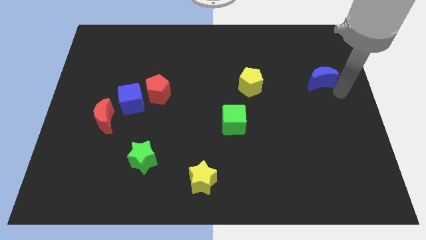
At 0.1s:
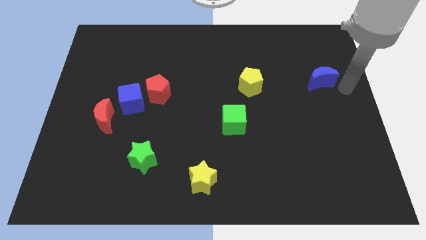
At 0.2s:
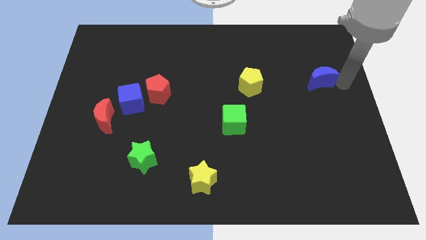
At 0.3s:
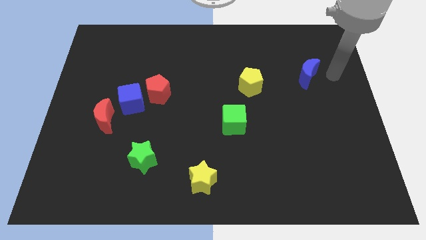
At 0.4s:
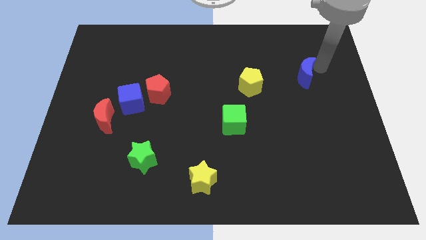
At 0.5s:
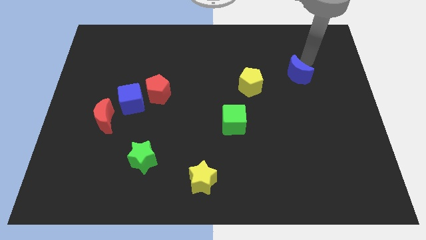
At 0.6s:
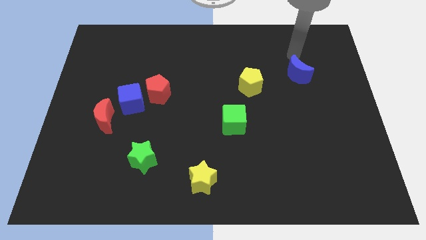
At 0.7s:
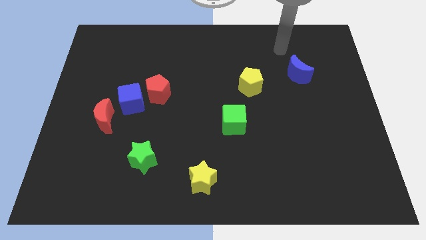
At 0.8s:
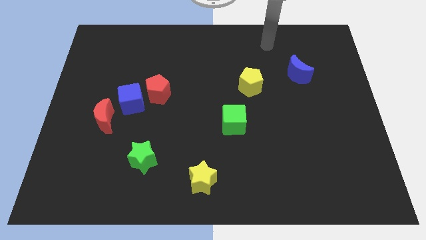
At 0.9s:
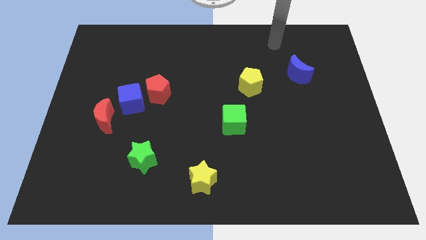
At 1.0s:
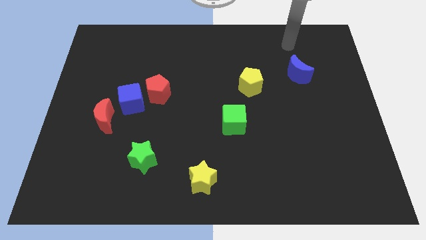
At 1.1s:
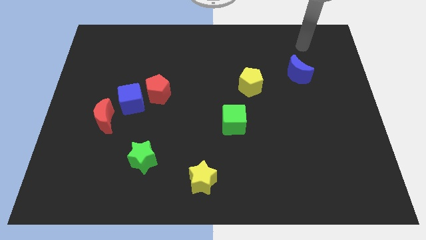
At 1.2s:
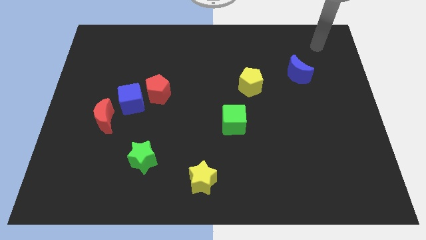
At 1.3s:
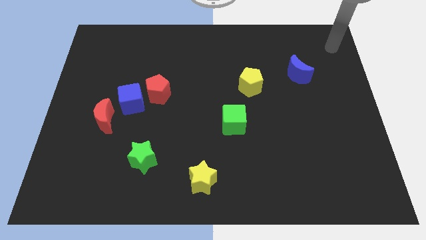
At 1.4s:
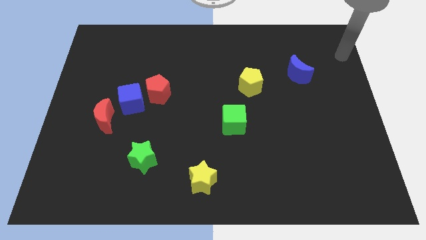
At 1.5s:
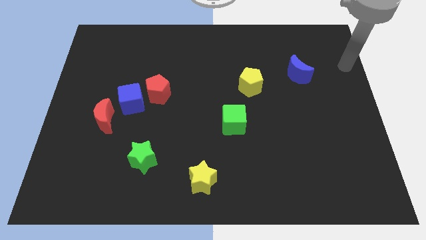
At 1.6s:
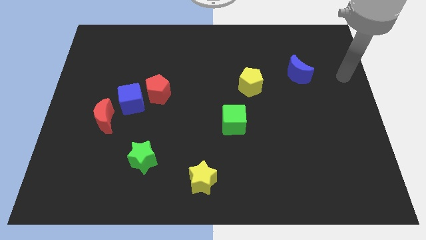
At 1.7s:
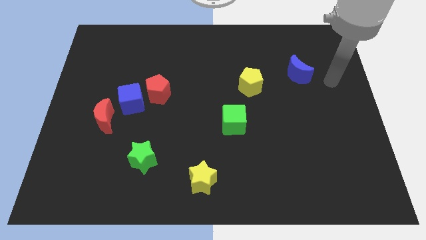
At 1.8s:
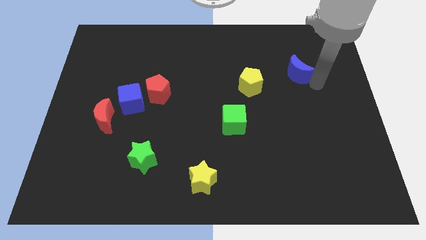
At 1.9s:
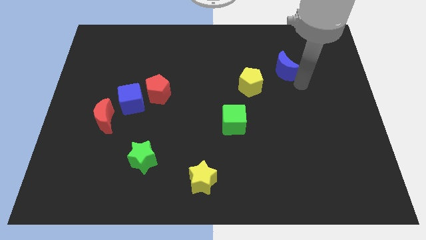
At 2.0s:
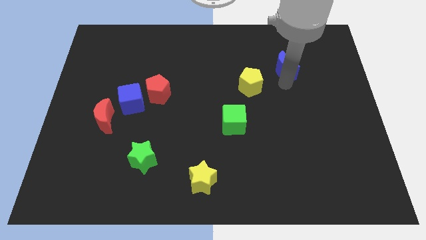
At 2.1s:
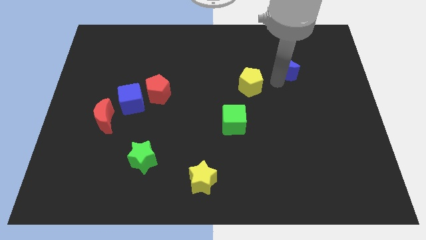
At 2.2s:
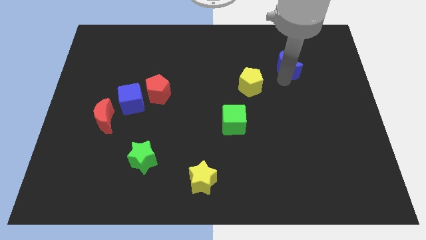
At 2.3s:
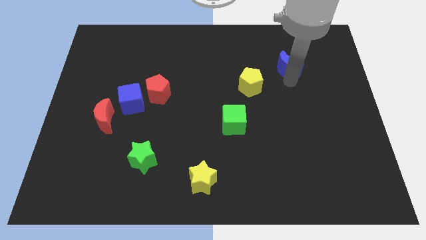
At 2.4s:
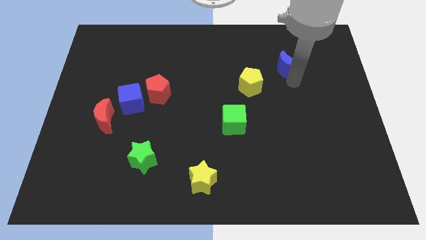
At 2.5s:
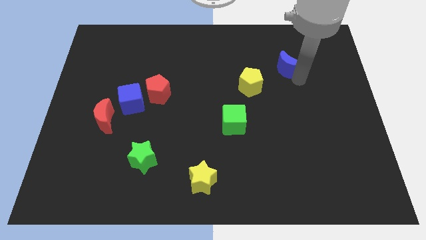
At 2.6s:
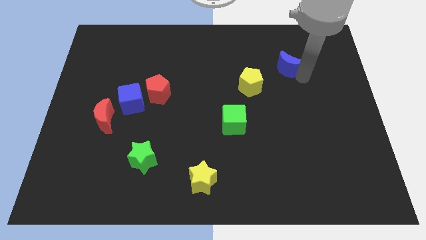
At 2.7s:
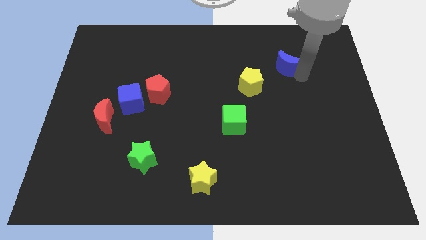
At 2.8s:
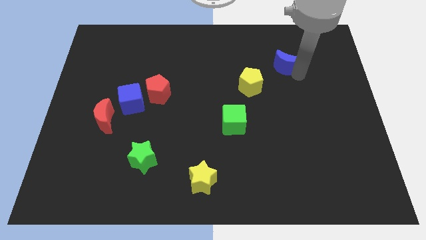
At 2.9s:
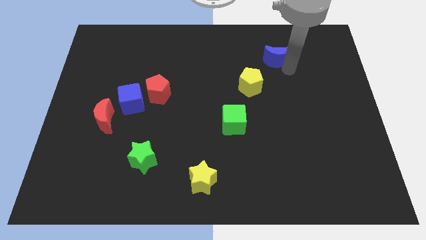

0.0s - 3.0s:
place the blue moon diagonally top right to yellow pentragon

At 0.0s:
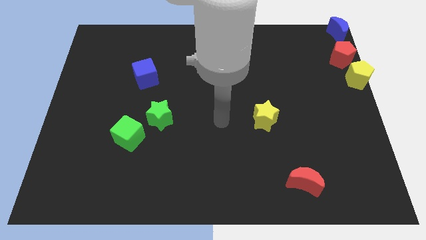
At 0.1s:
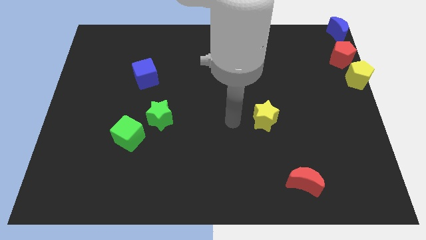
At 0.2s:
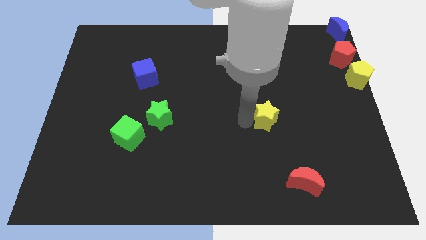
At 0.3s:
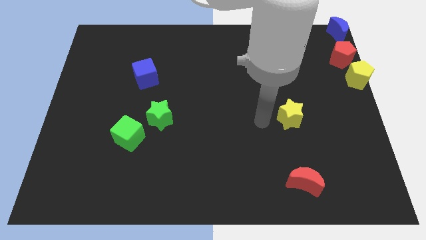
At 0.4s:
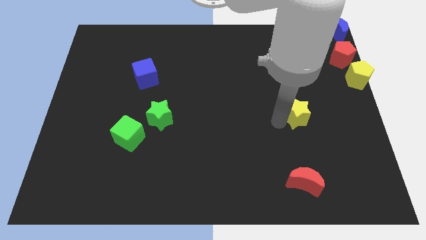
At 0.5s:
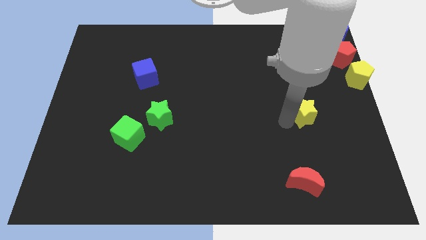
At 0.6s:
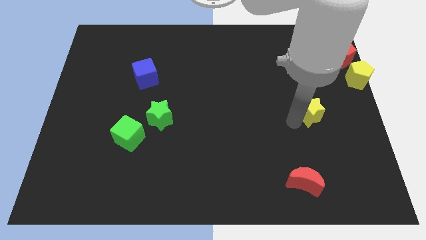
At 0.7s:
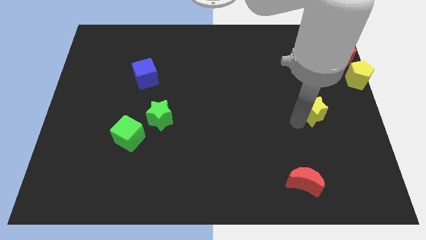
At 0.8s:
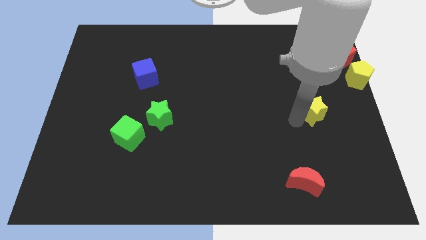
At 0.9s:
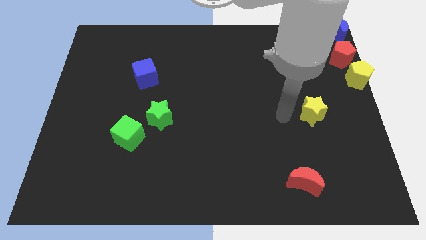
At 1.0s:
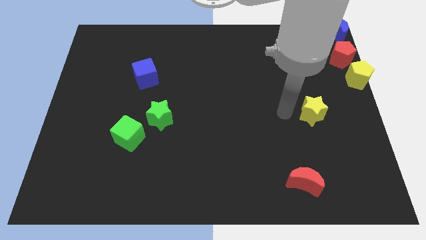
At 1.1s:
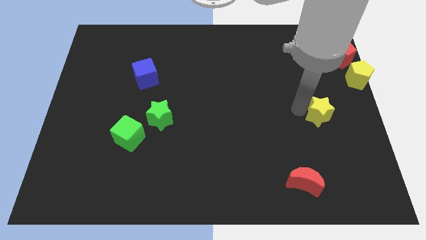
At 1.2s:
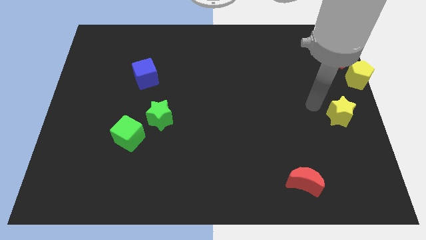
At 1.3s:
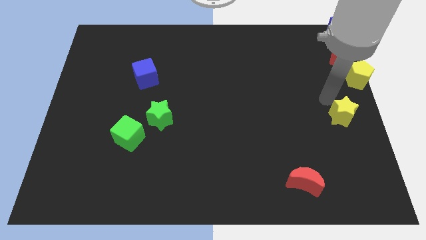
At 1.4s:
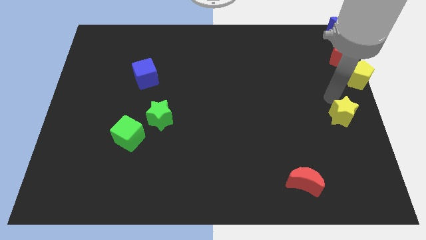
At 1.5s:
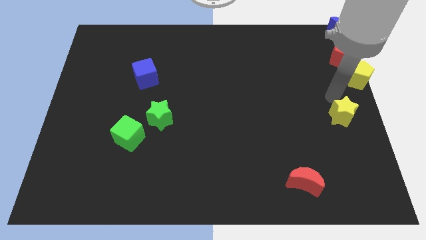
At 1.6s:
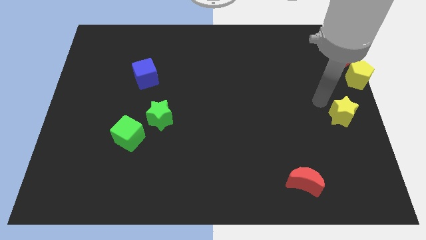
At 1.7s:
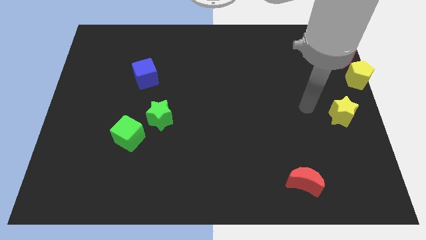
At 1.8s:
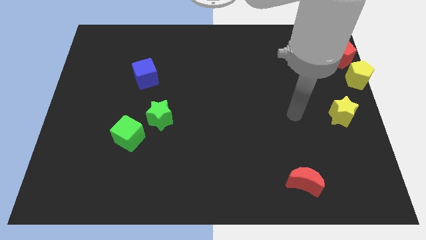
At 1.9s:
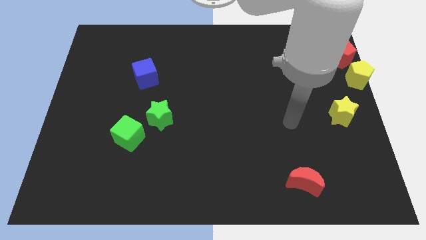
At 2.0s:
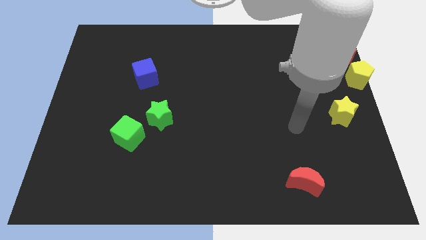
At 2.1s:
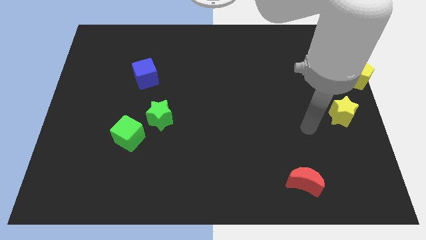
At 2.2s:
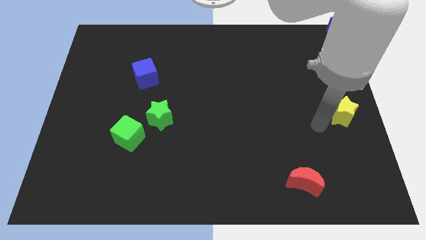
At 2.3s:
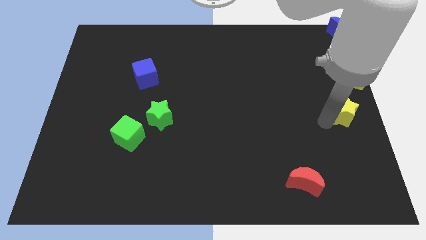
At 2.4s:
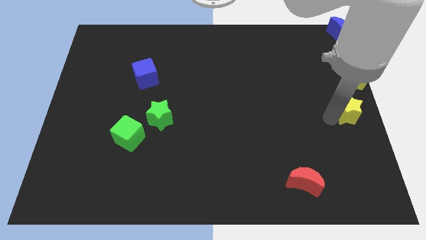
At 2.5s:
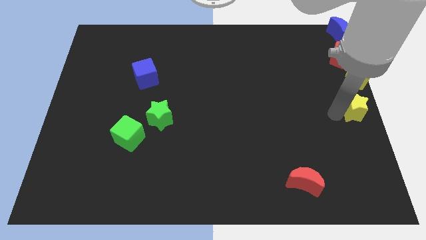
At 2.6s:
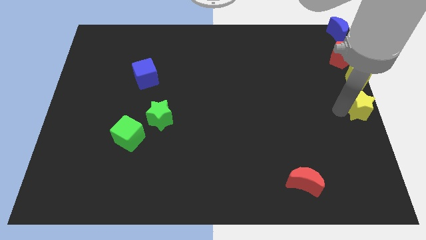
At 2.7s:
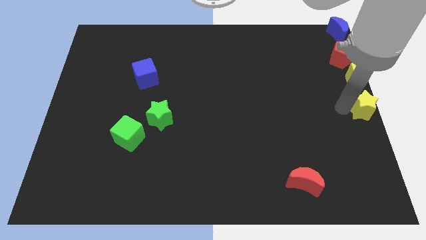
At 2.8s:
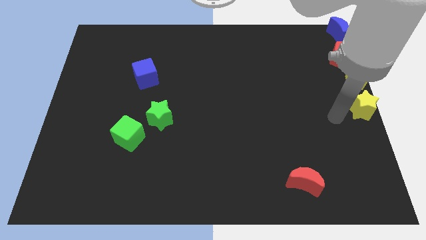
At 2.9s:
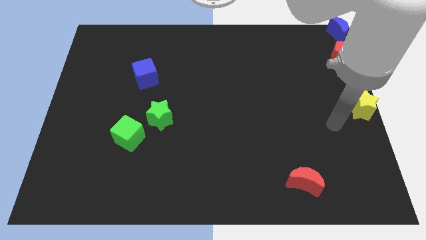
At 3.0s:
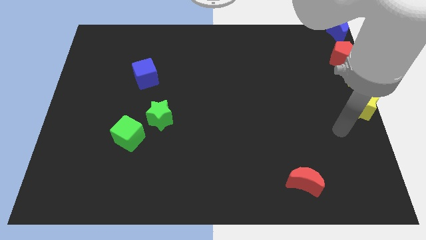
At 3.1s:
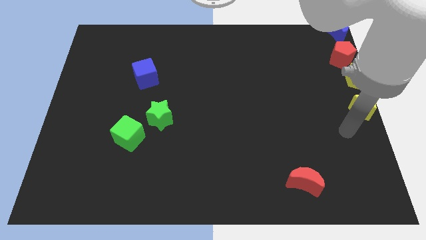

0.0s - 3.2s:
put the yellow star vertically below the yellow pentagon

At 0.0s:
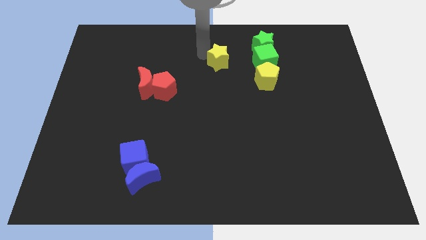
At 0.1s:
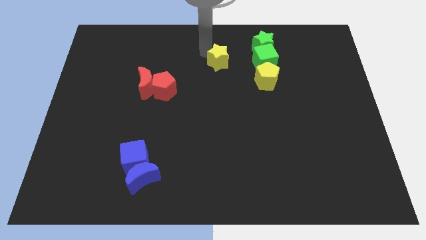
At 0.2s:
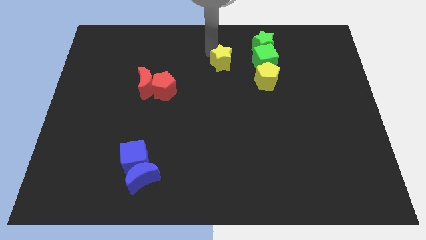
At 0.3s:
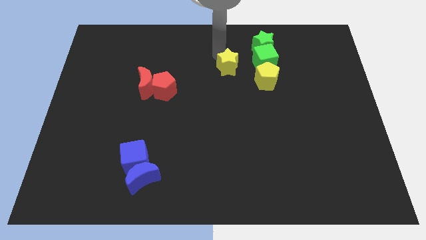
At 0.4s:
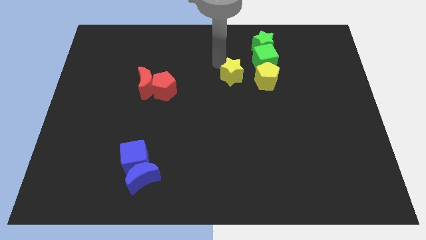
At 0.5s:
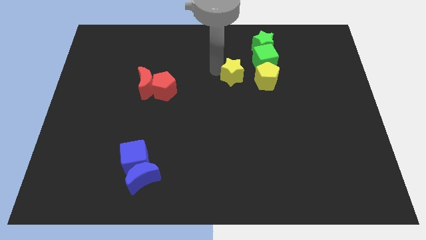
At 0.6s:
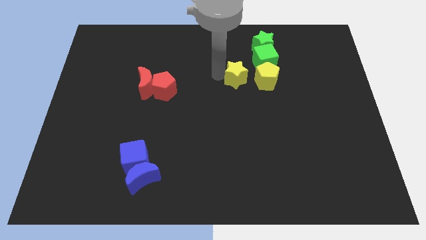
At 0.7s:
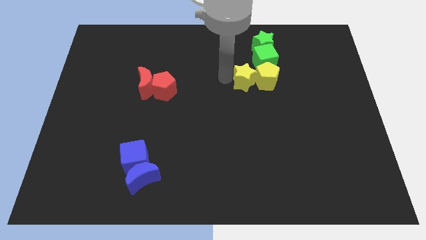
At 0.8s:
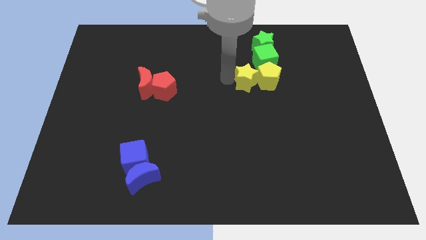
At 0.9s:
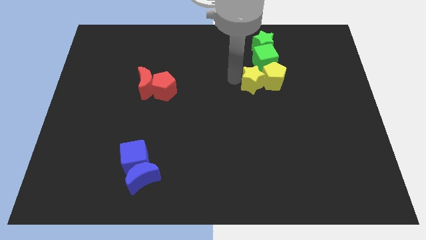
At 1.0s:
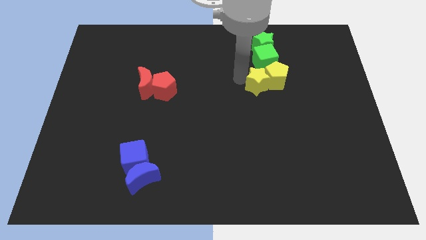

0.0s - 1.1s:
push the yellow star into the yellow pentagon

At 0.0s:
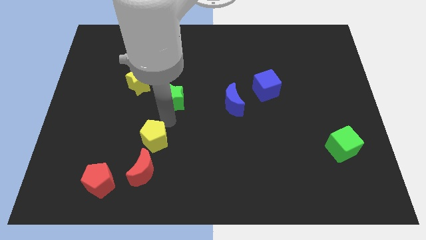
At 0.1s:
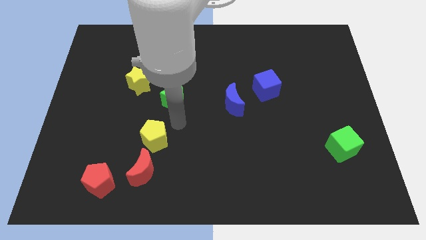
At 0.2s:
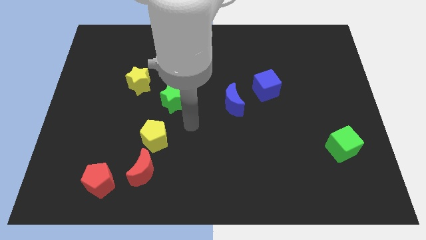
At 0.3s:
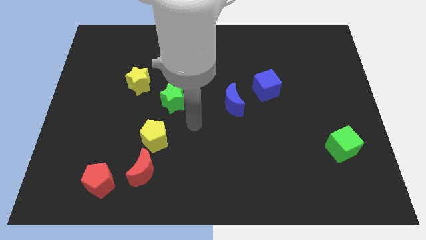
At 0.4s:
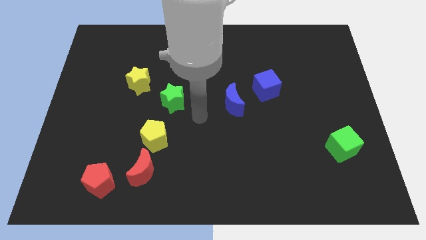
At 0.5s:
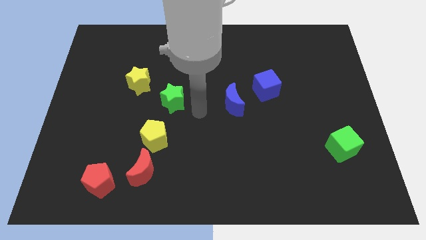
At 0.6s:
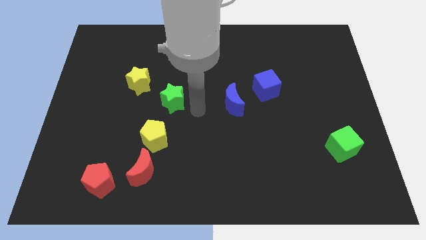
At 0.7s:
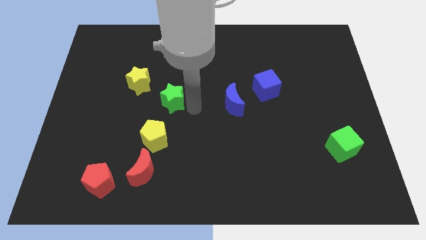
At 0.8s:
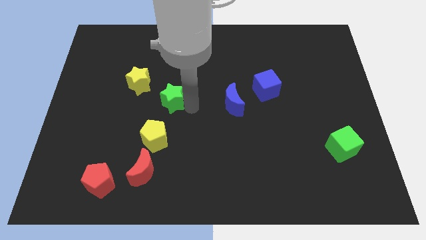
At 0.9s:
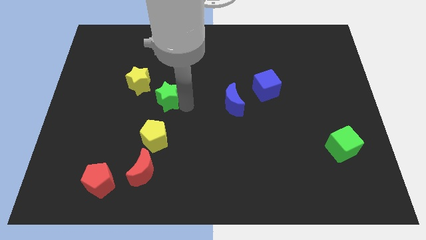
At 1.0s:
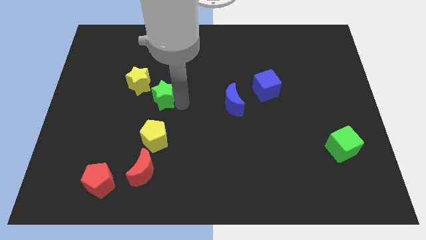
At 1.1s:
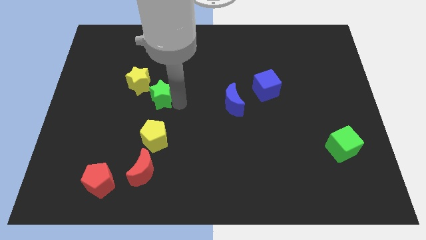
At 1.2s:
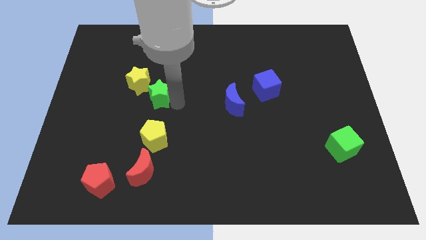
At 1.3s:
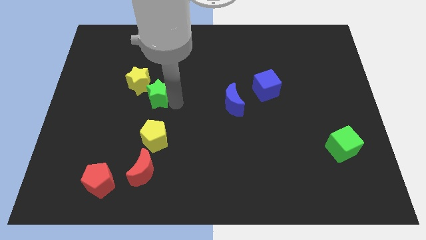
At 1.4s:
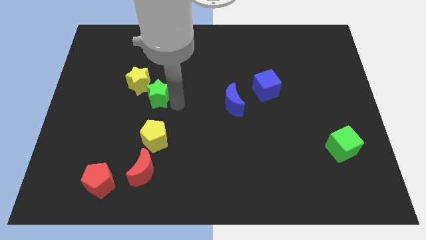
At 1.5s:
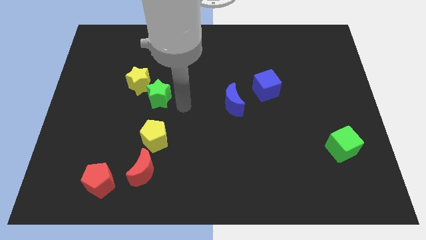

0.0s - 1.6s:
push green star towards yellow star

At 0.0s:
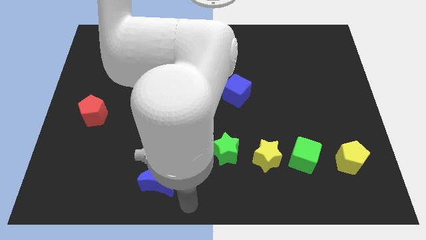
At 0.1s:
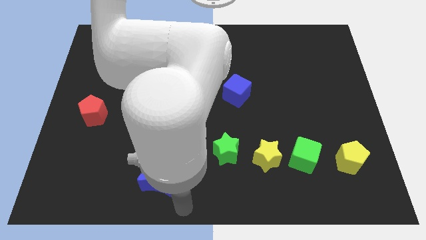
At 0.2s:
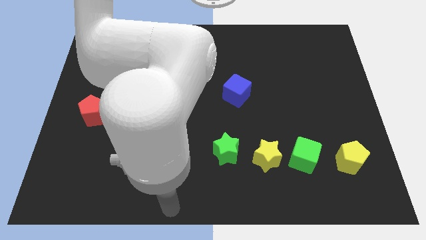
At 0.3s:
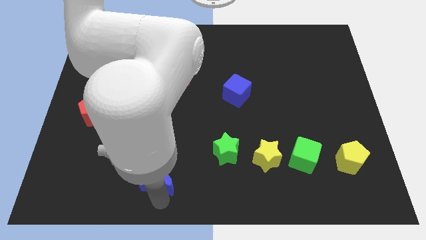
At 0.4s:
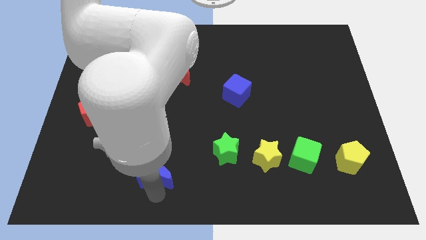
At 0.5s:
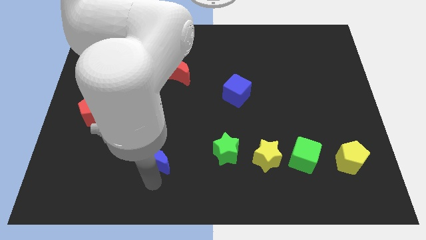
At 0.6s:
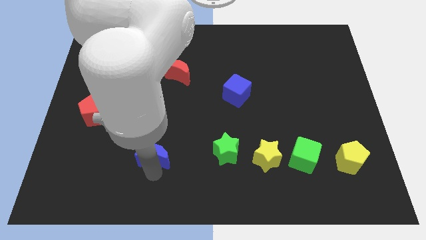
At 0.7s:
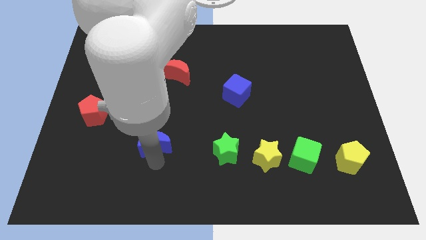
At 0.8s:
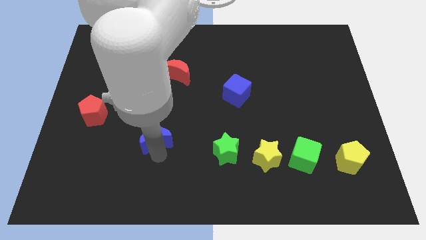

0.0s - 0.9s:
move the blue moon diagonal to the left of the green star
